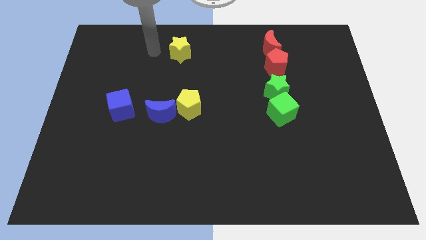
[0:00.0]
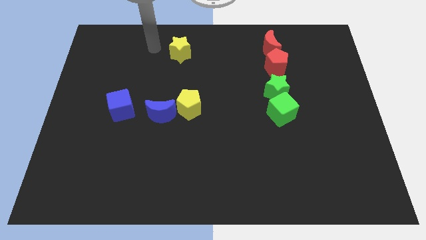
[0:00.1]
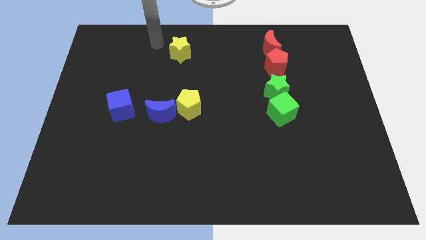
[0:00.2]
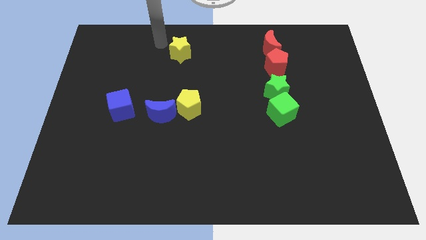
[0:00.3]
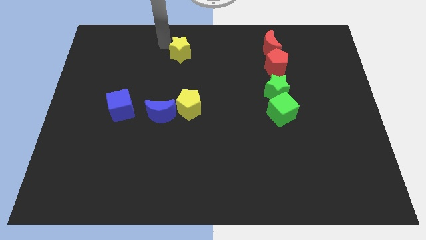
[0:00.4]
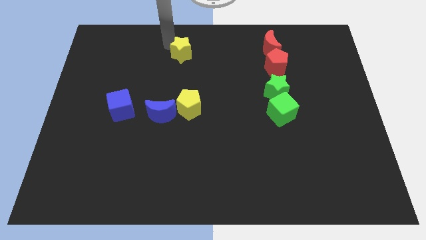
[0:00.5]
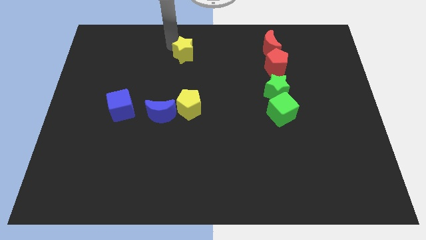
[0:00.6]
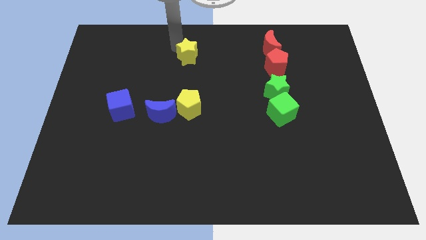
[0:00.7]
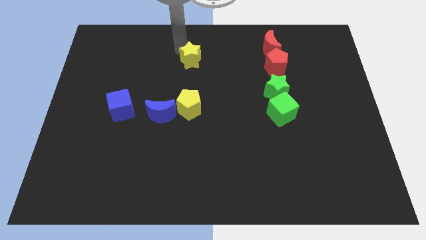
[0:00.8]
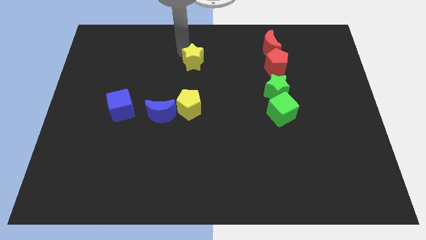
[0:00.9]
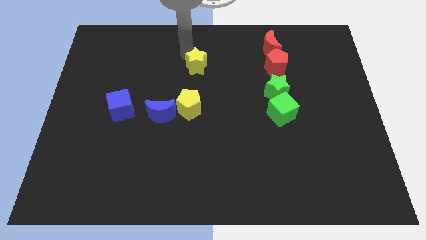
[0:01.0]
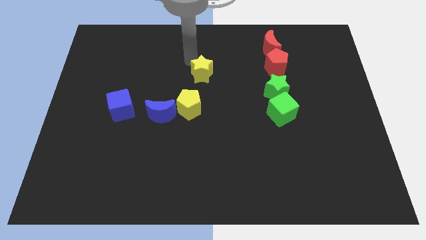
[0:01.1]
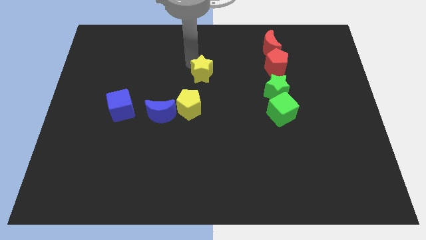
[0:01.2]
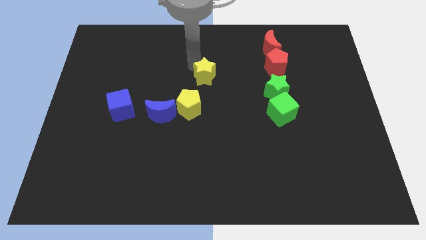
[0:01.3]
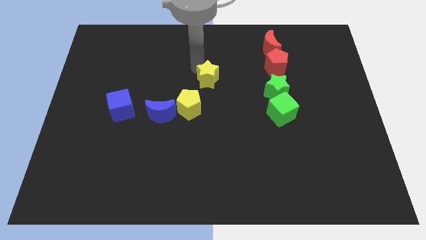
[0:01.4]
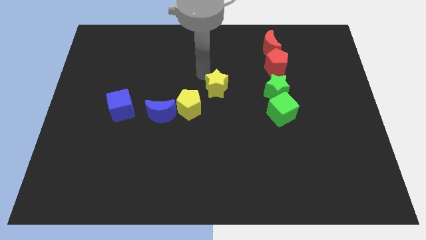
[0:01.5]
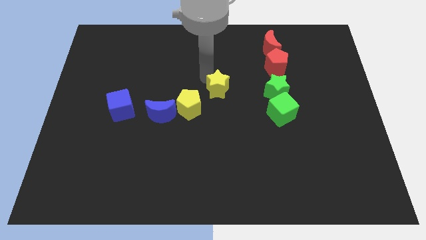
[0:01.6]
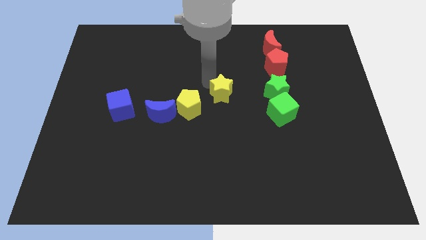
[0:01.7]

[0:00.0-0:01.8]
push the yellow star to the horizontal left side of the green star

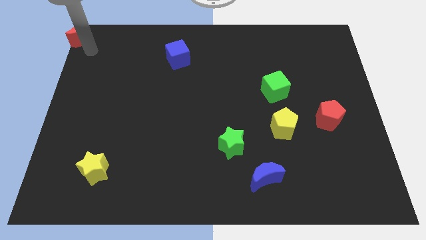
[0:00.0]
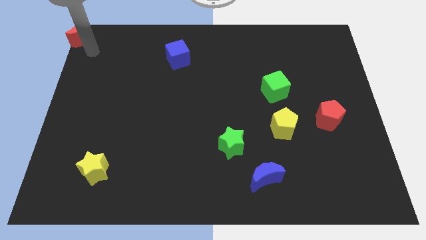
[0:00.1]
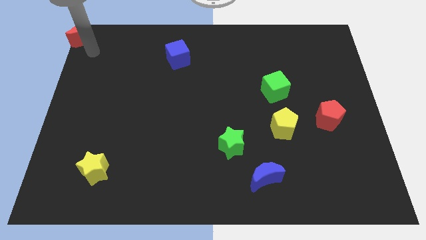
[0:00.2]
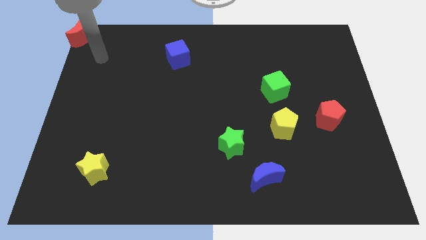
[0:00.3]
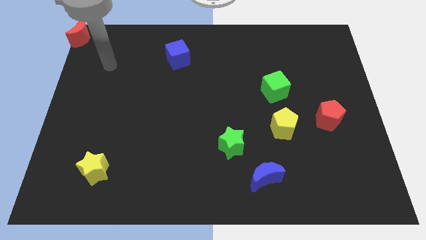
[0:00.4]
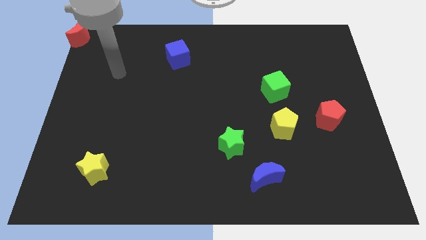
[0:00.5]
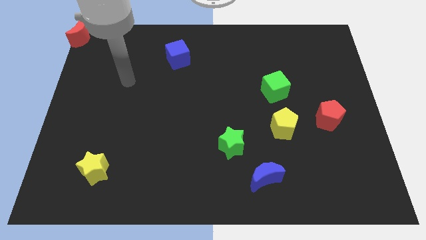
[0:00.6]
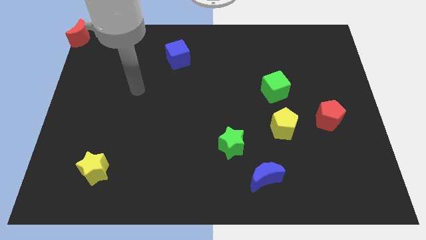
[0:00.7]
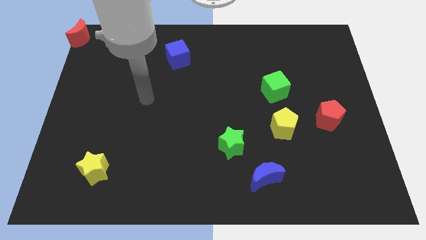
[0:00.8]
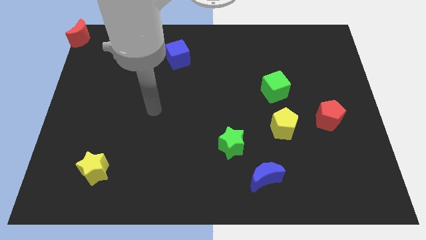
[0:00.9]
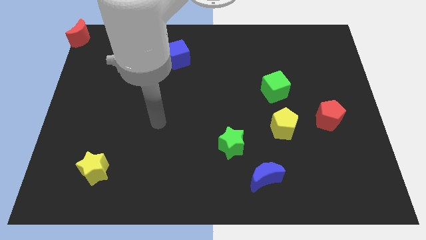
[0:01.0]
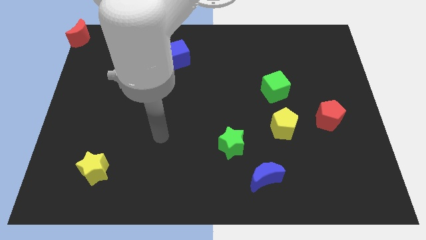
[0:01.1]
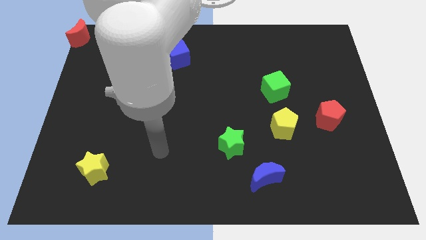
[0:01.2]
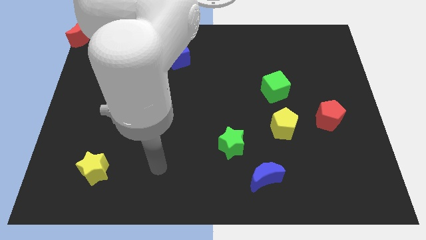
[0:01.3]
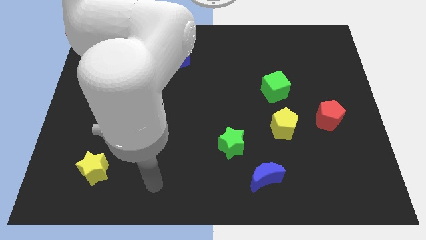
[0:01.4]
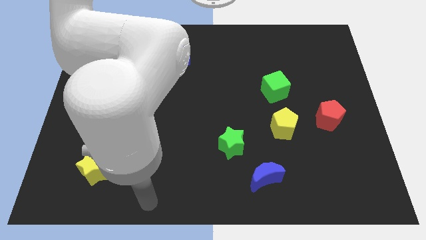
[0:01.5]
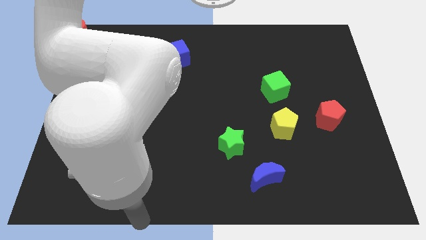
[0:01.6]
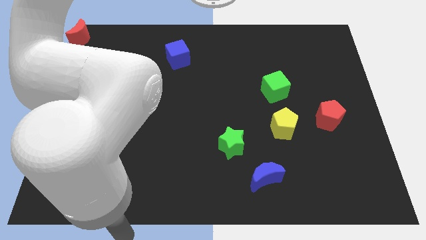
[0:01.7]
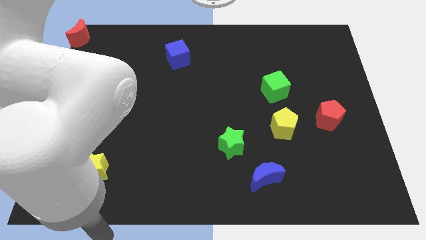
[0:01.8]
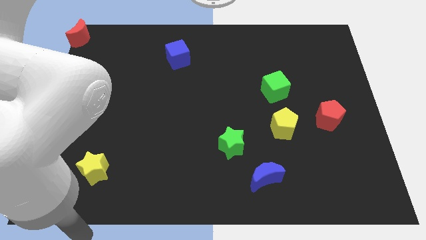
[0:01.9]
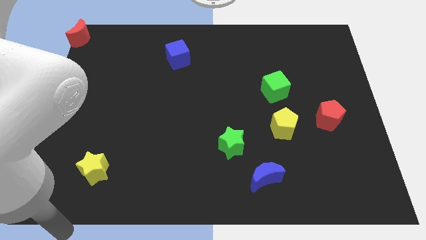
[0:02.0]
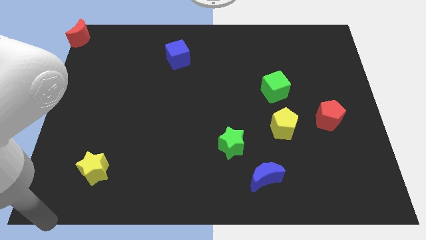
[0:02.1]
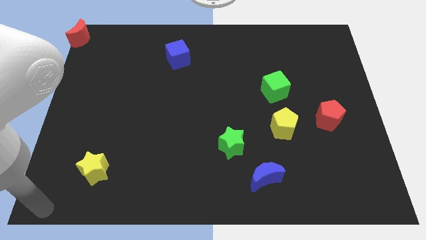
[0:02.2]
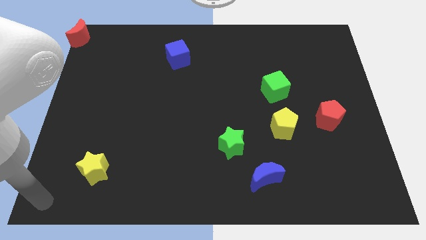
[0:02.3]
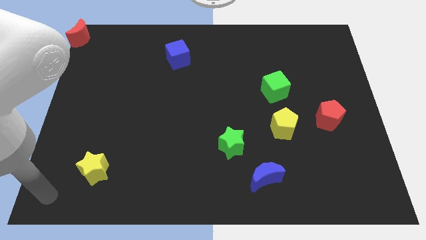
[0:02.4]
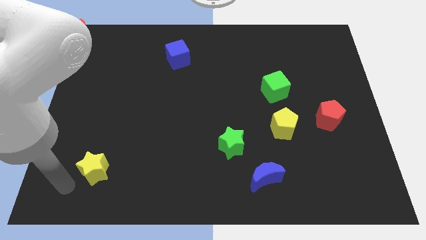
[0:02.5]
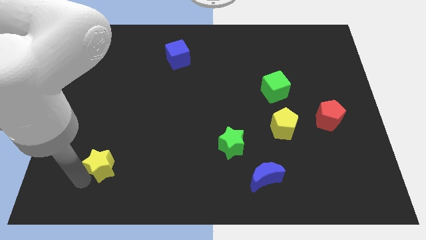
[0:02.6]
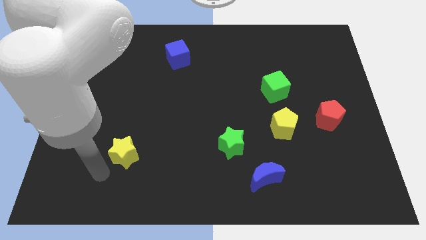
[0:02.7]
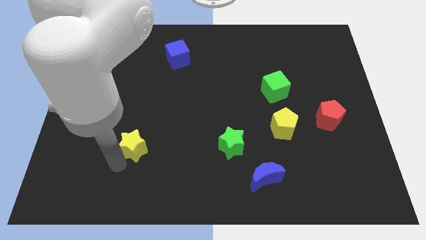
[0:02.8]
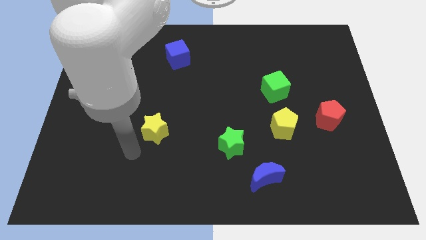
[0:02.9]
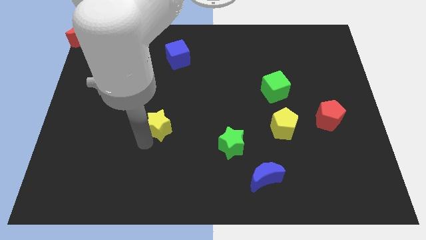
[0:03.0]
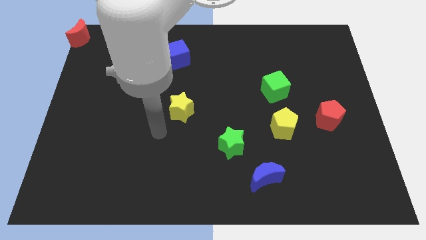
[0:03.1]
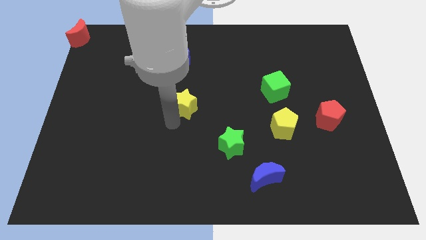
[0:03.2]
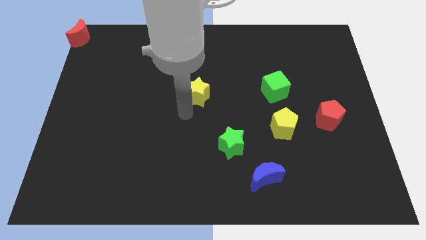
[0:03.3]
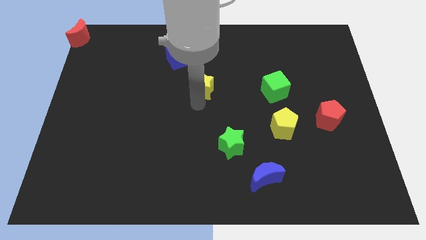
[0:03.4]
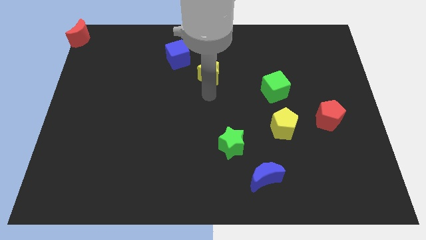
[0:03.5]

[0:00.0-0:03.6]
move the yellow star horizontal to the green cube

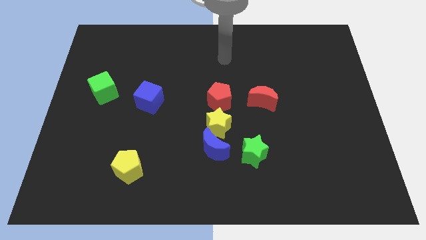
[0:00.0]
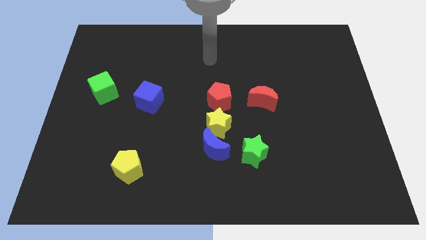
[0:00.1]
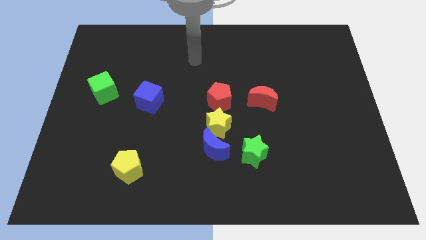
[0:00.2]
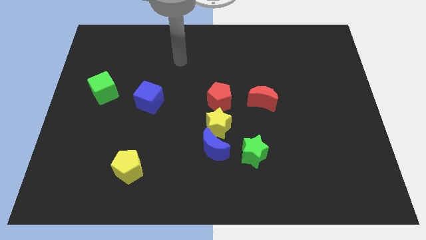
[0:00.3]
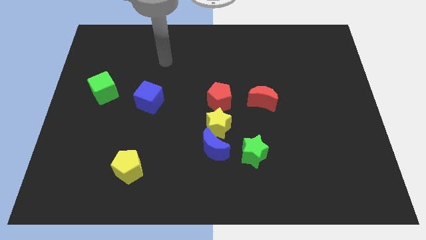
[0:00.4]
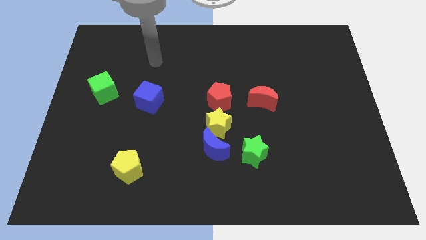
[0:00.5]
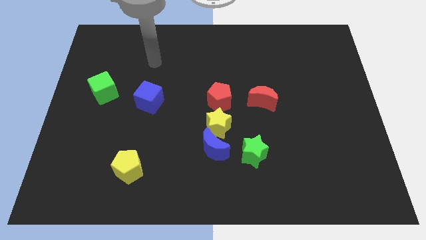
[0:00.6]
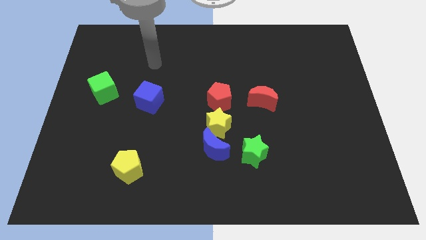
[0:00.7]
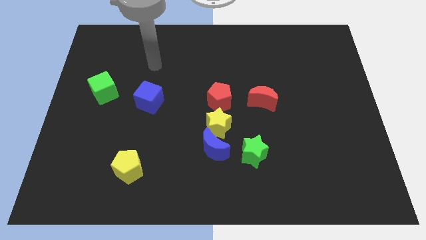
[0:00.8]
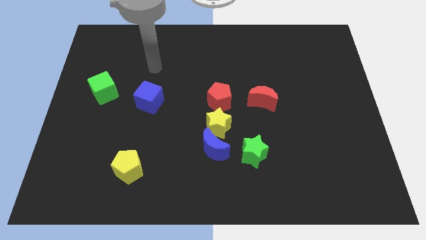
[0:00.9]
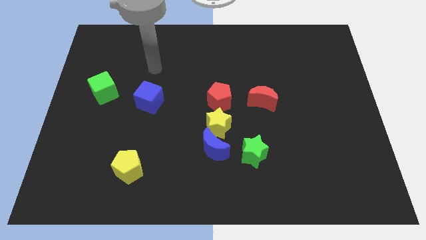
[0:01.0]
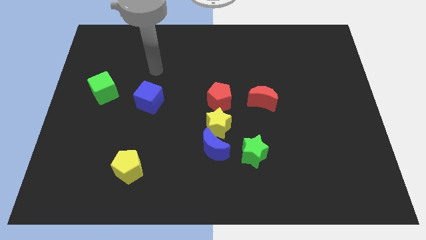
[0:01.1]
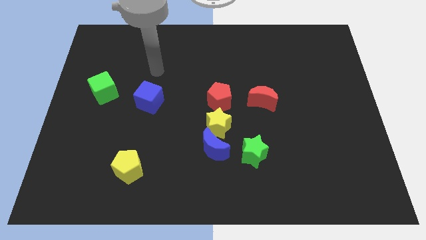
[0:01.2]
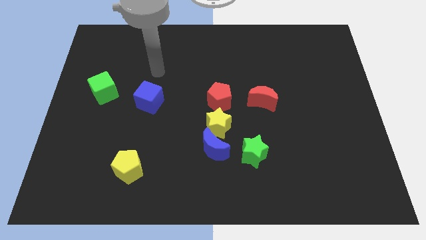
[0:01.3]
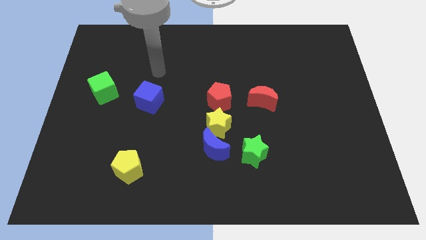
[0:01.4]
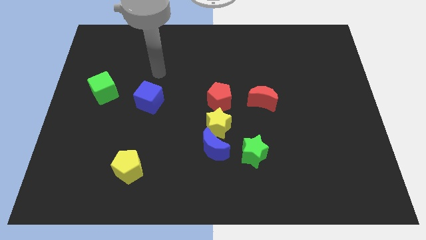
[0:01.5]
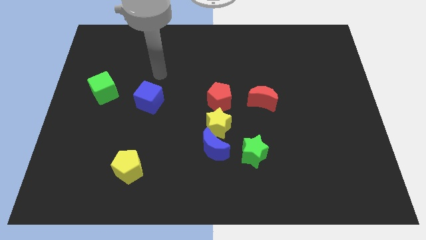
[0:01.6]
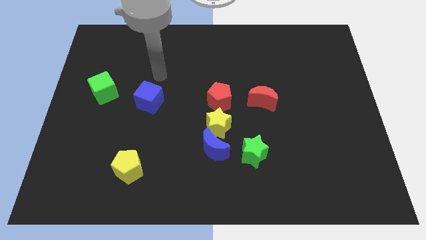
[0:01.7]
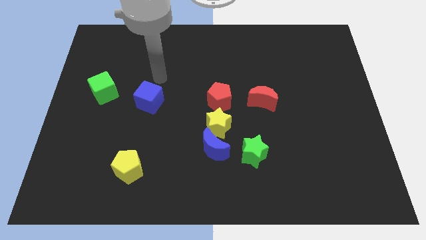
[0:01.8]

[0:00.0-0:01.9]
move your hand on top of blue cube

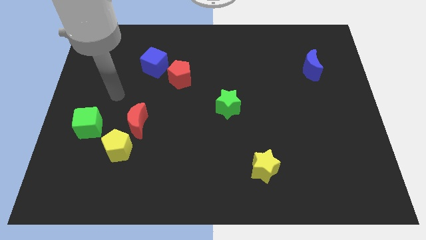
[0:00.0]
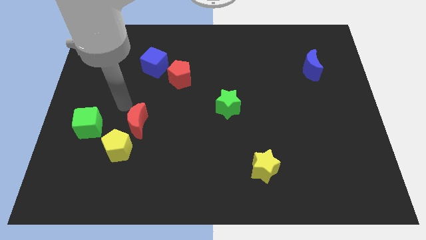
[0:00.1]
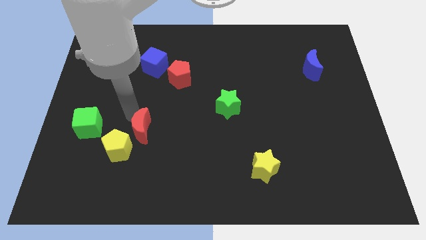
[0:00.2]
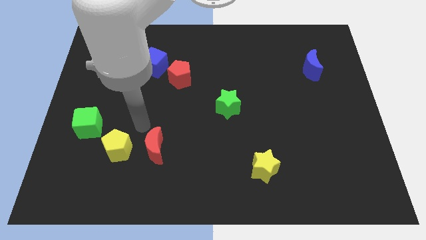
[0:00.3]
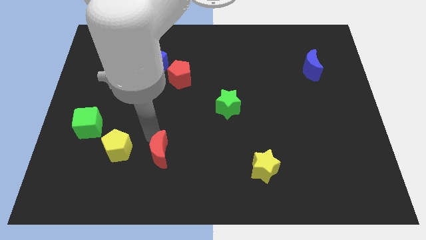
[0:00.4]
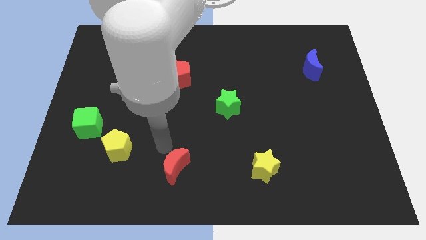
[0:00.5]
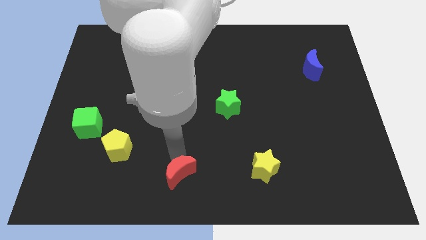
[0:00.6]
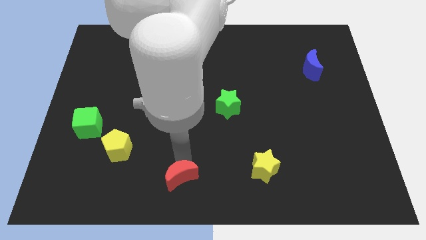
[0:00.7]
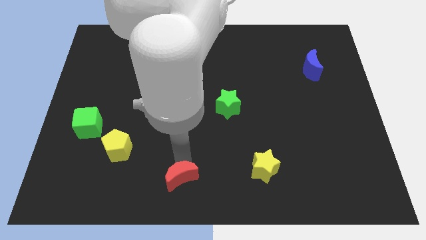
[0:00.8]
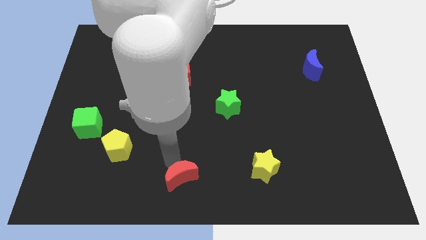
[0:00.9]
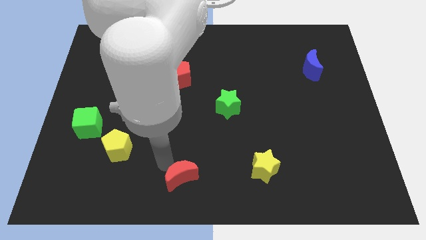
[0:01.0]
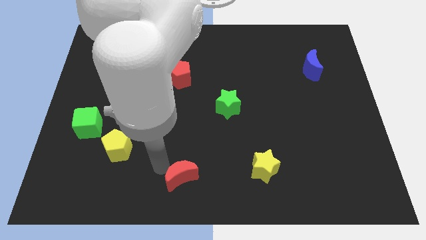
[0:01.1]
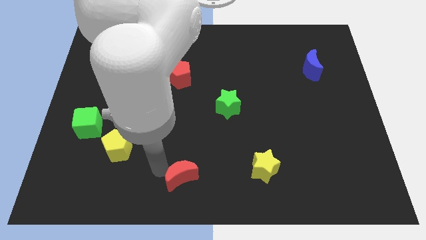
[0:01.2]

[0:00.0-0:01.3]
push red crescent below red pentagon

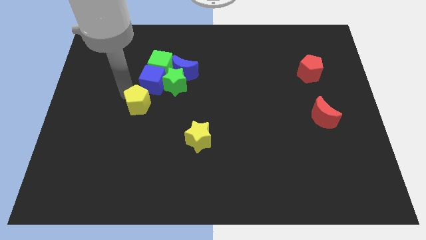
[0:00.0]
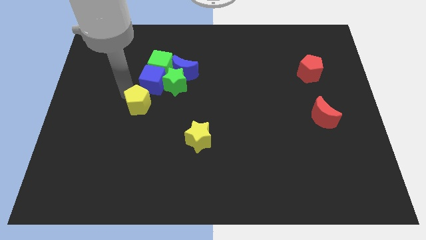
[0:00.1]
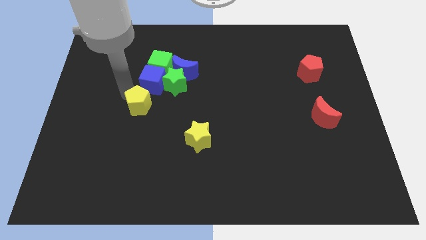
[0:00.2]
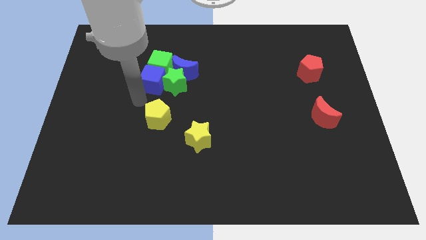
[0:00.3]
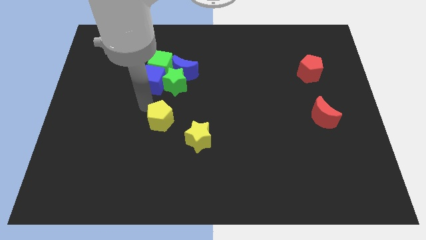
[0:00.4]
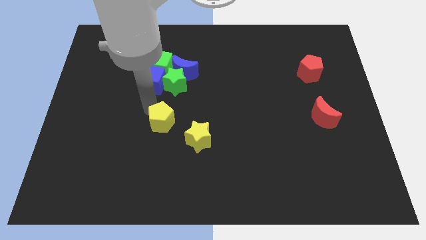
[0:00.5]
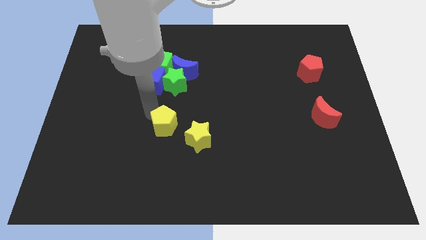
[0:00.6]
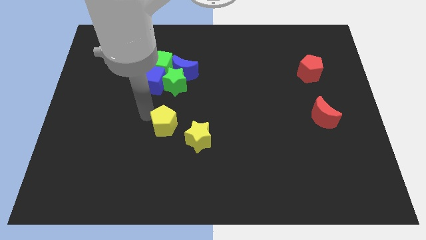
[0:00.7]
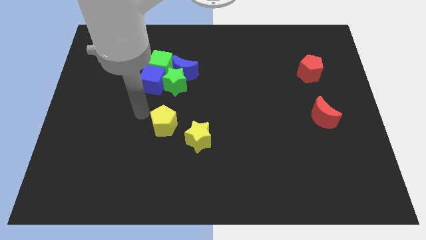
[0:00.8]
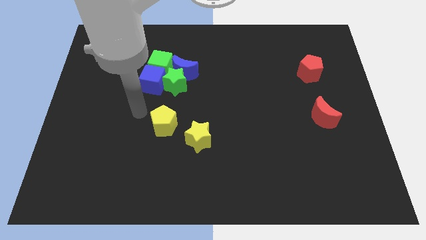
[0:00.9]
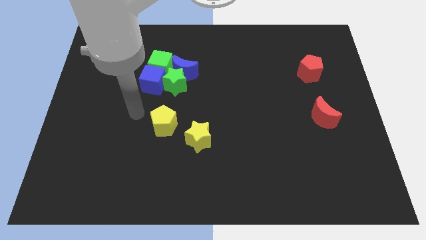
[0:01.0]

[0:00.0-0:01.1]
move yellow pentagon towards yellow star
